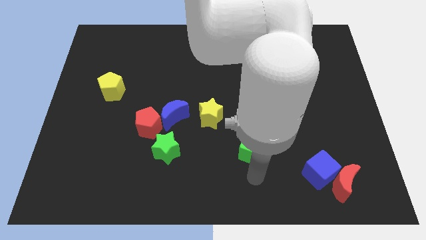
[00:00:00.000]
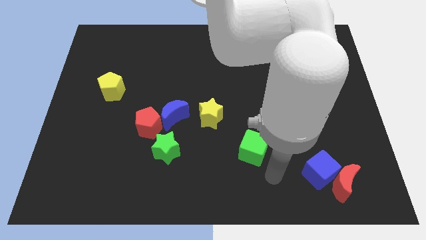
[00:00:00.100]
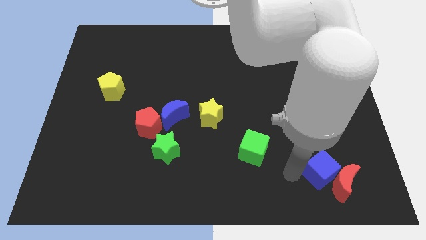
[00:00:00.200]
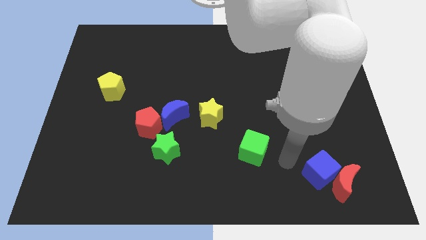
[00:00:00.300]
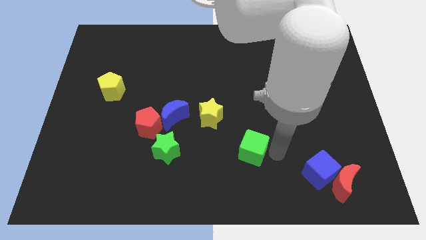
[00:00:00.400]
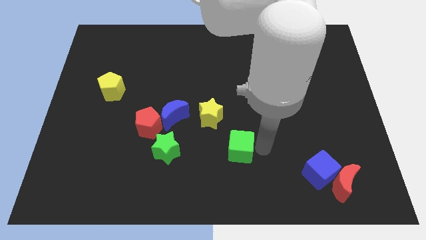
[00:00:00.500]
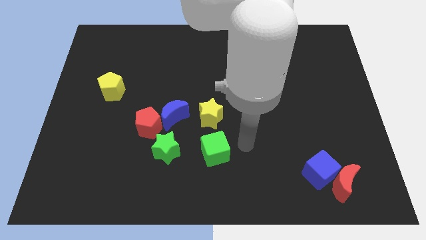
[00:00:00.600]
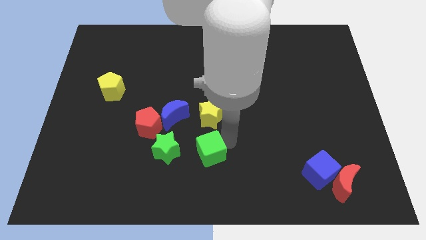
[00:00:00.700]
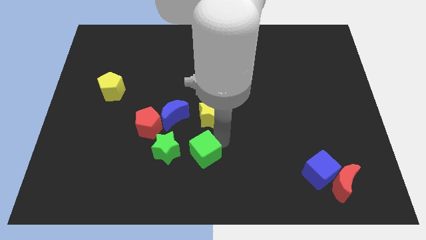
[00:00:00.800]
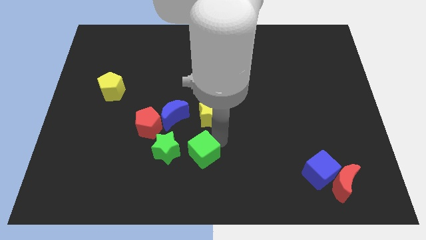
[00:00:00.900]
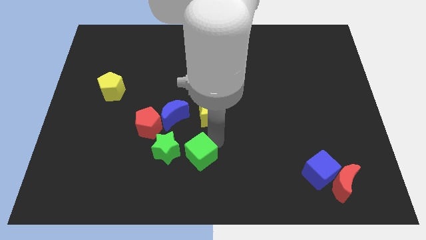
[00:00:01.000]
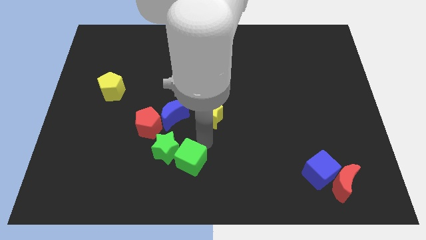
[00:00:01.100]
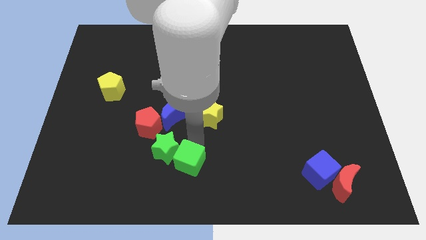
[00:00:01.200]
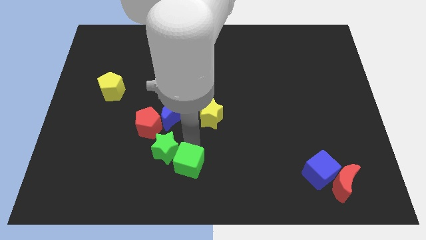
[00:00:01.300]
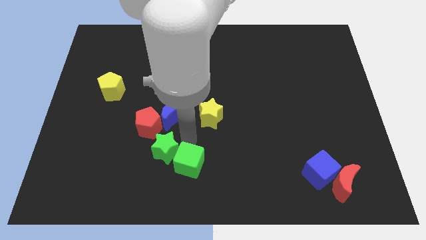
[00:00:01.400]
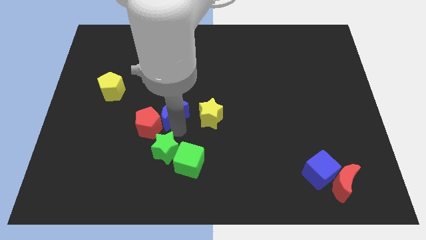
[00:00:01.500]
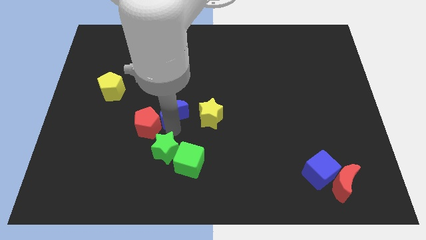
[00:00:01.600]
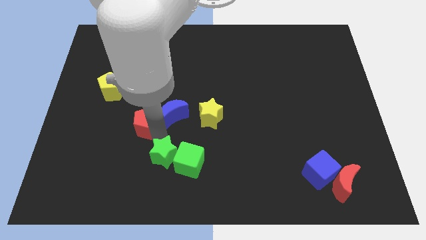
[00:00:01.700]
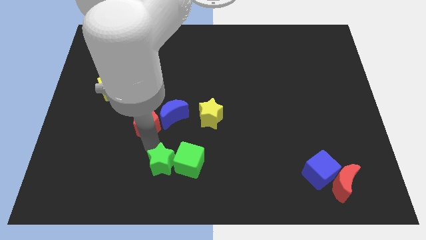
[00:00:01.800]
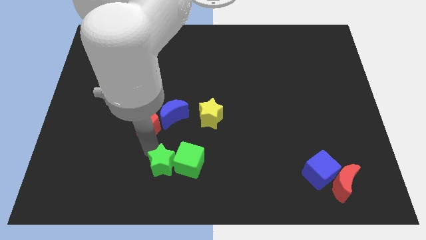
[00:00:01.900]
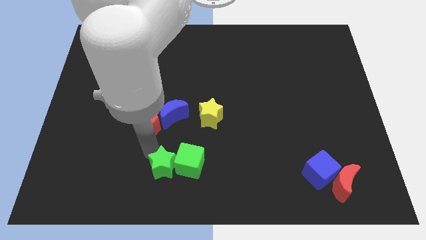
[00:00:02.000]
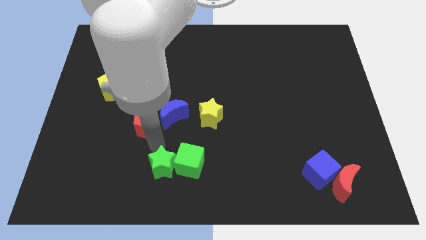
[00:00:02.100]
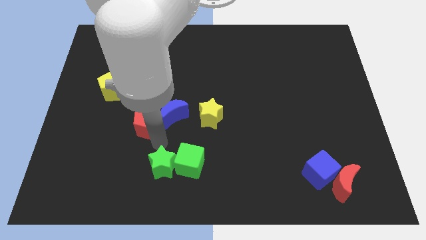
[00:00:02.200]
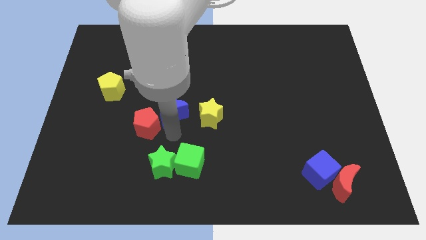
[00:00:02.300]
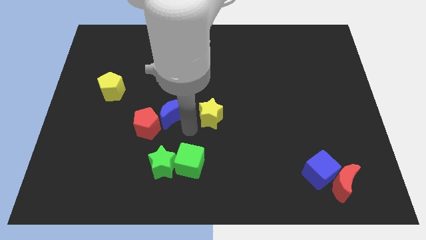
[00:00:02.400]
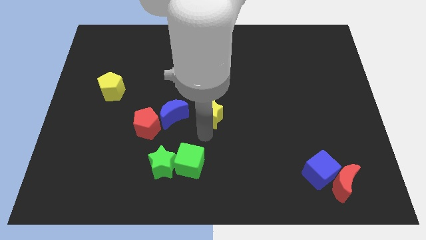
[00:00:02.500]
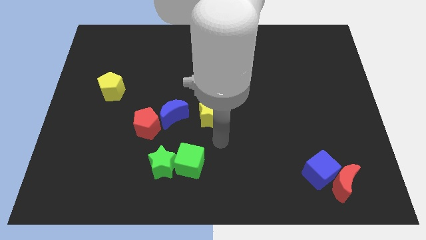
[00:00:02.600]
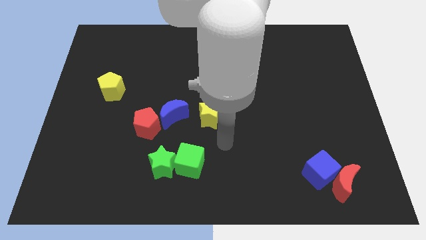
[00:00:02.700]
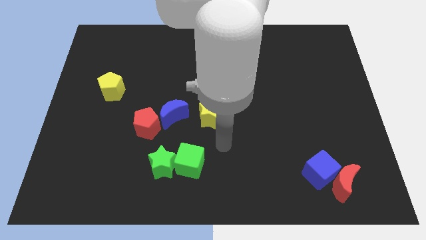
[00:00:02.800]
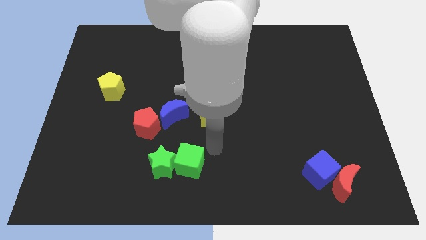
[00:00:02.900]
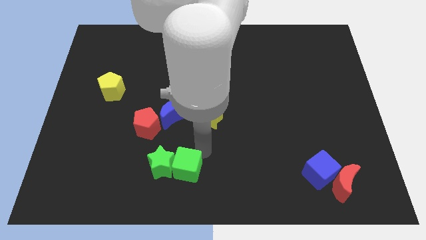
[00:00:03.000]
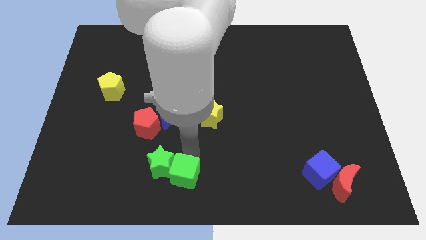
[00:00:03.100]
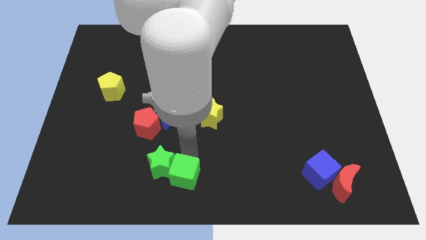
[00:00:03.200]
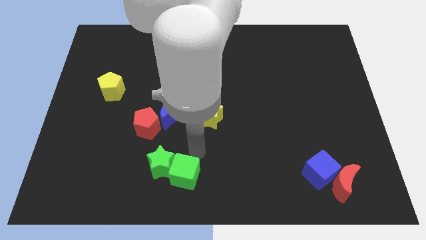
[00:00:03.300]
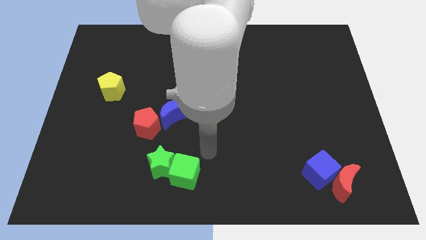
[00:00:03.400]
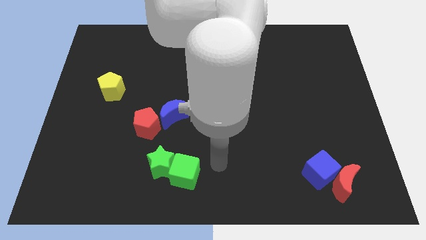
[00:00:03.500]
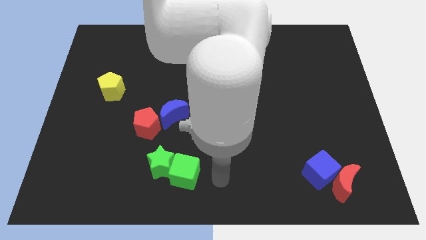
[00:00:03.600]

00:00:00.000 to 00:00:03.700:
push both green blocks to the bottom right side of the red pentagon

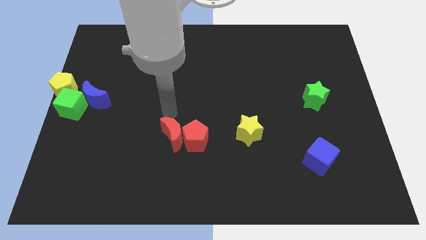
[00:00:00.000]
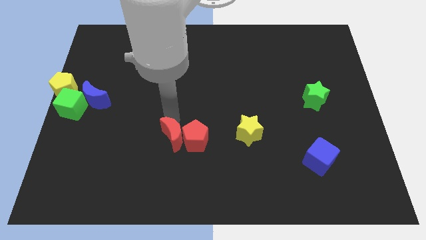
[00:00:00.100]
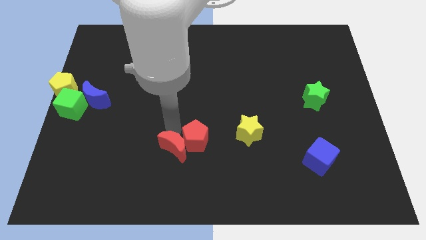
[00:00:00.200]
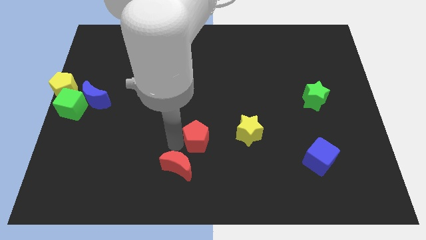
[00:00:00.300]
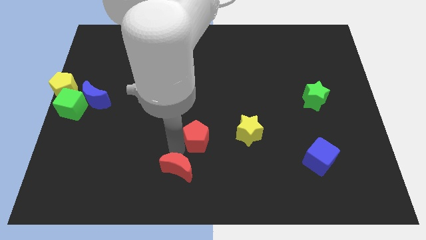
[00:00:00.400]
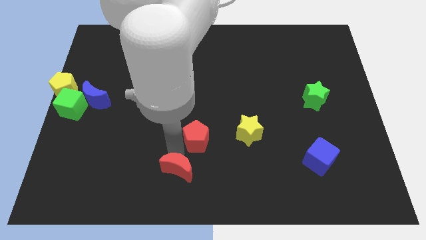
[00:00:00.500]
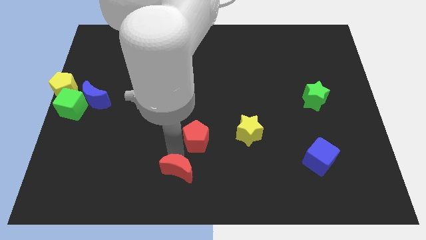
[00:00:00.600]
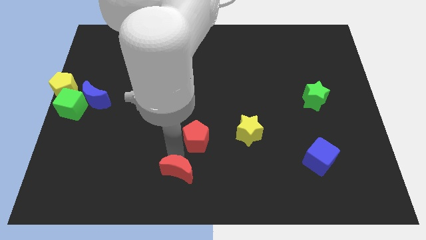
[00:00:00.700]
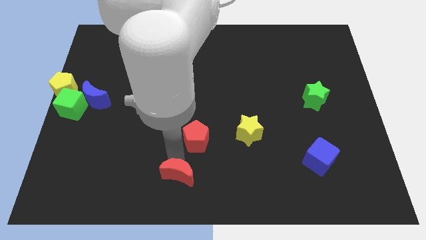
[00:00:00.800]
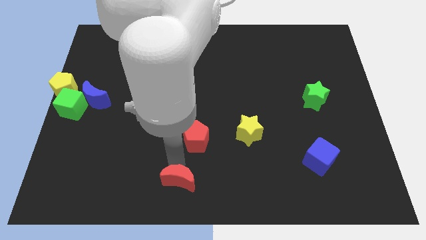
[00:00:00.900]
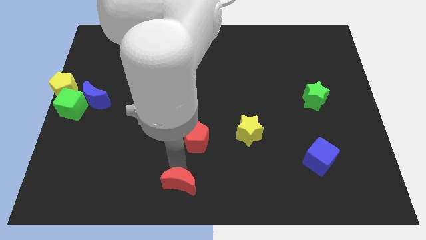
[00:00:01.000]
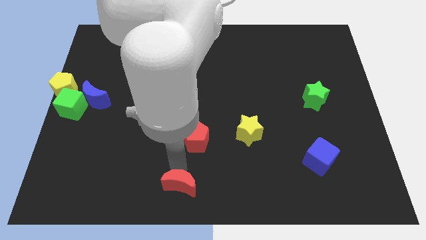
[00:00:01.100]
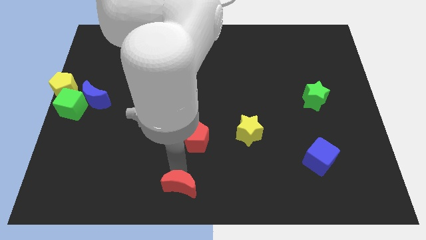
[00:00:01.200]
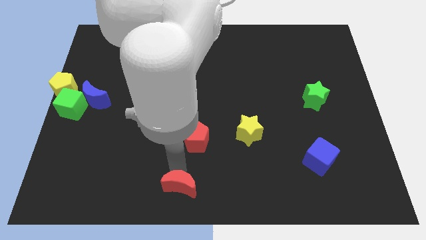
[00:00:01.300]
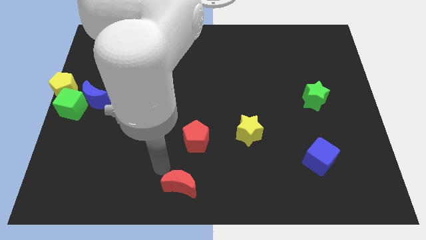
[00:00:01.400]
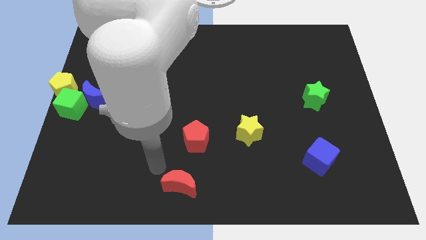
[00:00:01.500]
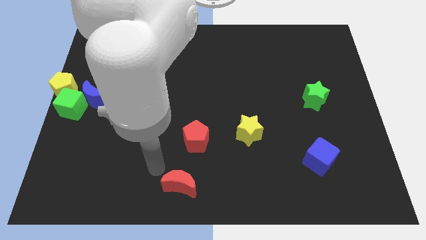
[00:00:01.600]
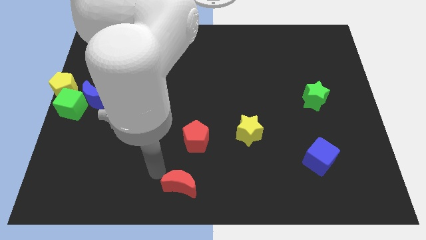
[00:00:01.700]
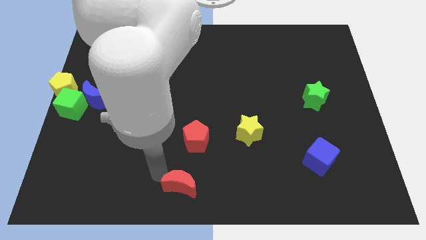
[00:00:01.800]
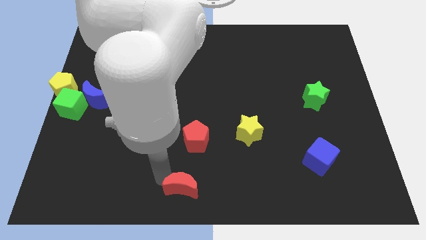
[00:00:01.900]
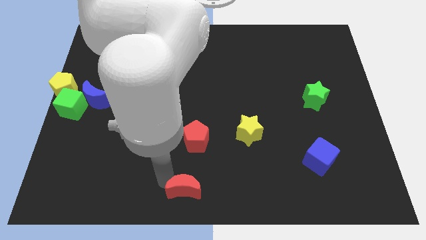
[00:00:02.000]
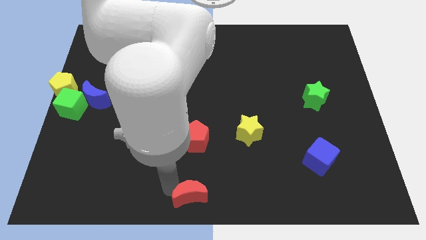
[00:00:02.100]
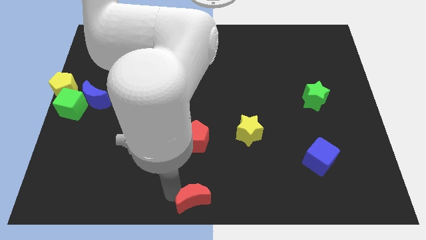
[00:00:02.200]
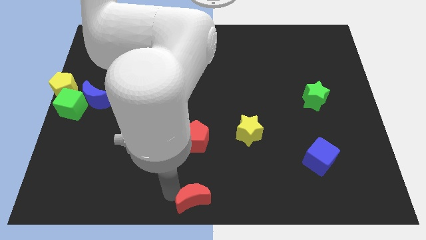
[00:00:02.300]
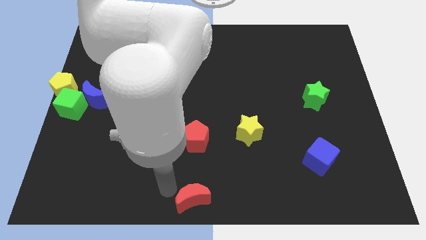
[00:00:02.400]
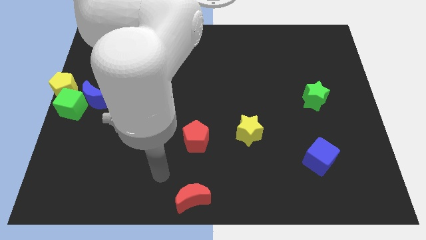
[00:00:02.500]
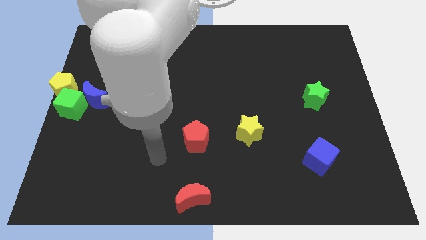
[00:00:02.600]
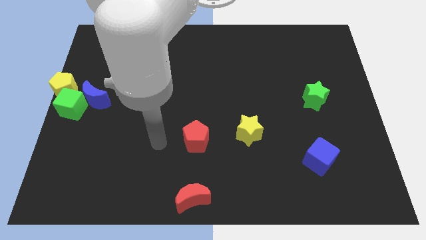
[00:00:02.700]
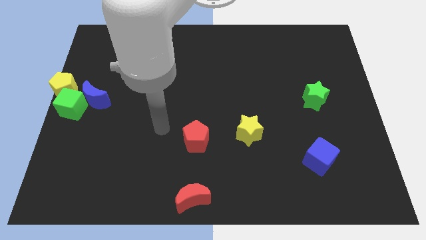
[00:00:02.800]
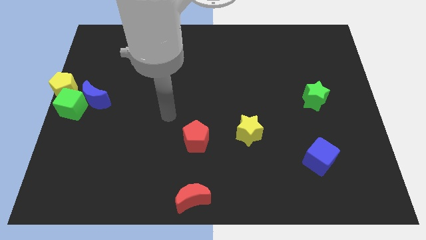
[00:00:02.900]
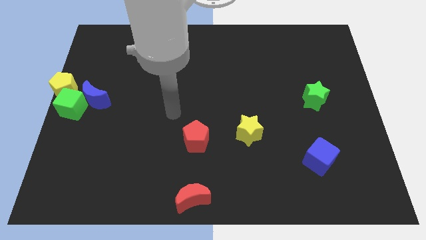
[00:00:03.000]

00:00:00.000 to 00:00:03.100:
place red moon to the bottom center of the board

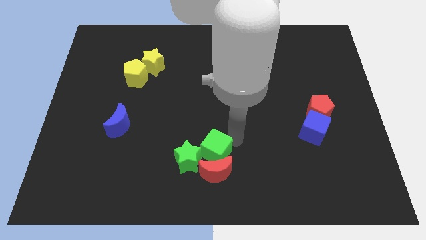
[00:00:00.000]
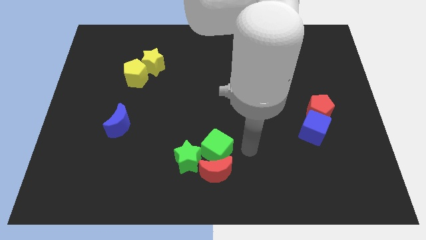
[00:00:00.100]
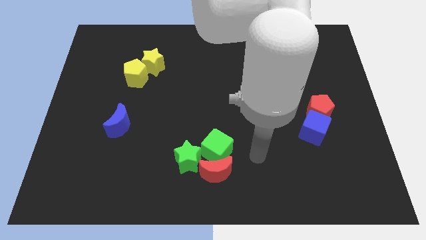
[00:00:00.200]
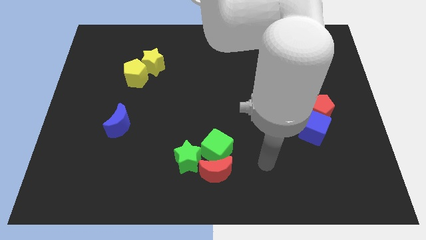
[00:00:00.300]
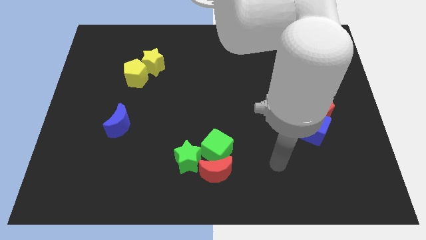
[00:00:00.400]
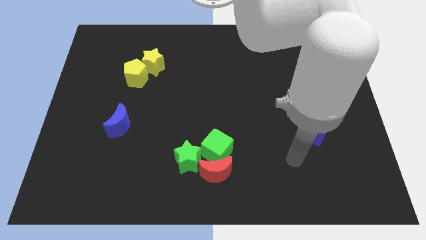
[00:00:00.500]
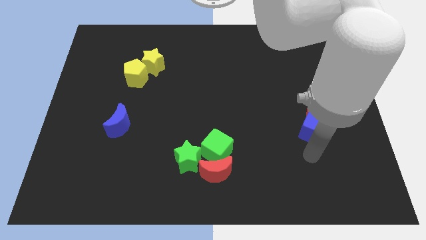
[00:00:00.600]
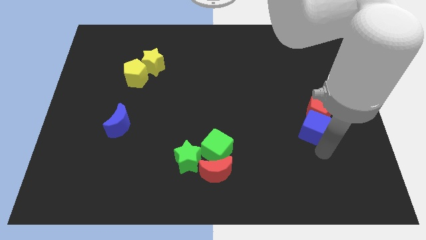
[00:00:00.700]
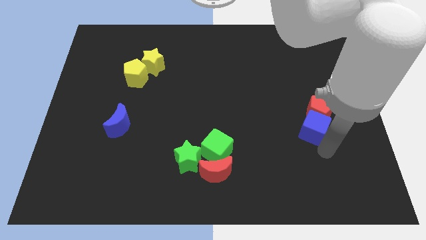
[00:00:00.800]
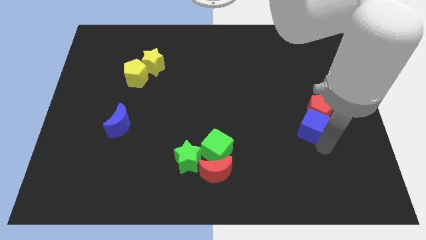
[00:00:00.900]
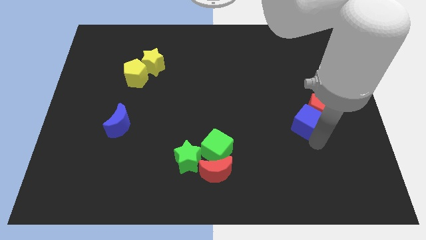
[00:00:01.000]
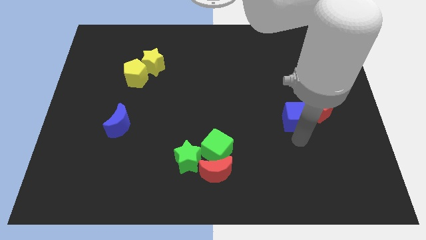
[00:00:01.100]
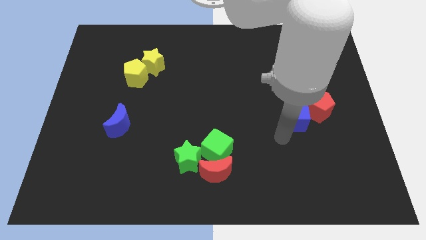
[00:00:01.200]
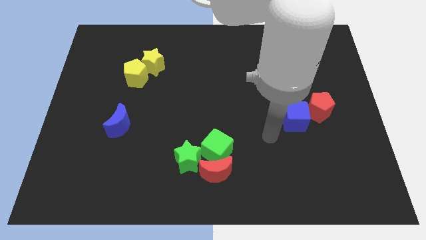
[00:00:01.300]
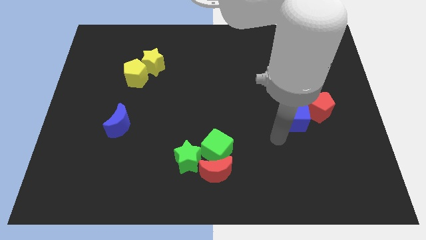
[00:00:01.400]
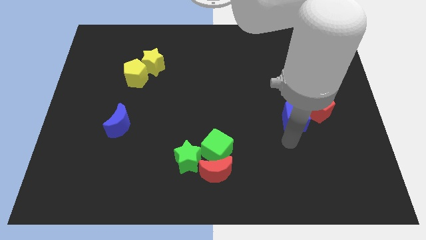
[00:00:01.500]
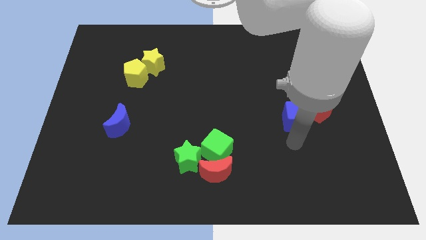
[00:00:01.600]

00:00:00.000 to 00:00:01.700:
slightly push the blue cube and red pentagon towards the top side of the board

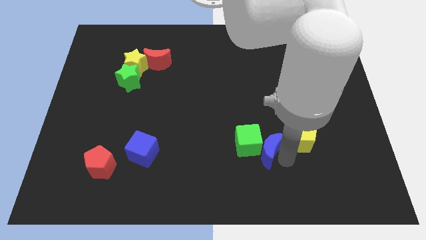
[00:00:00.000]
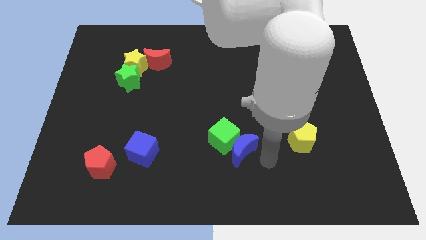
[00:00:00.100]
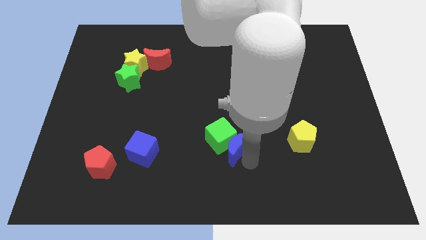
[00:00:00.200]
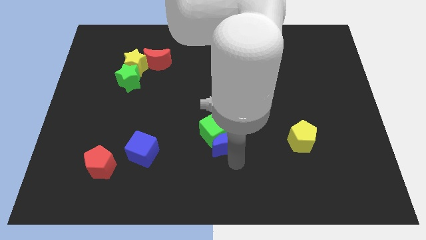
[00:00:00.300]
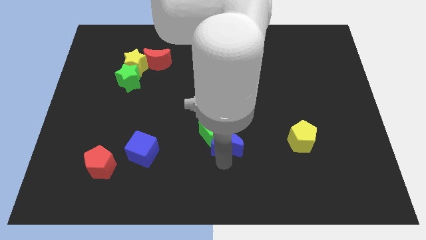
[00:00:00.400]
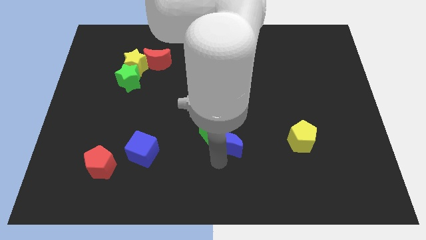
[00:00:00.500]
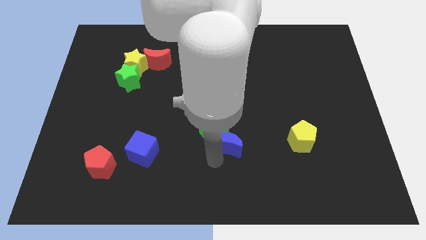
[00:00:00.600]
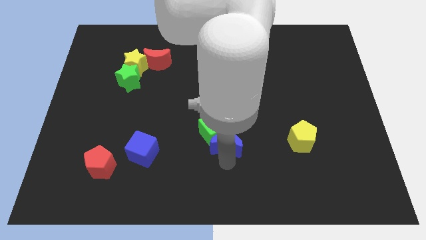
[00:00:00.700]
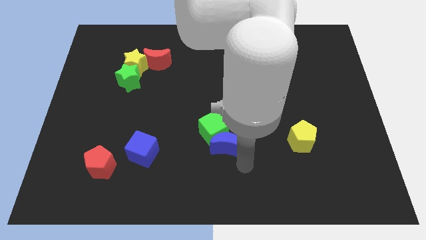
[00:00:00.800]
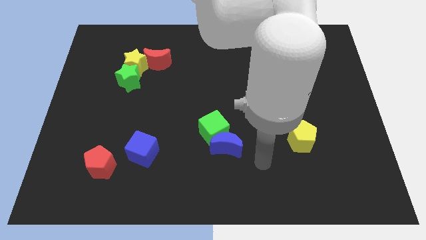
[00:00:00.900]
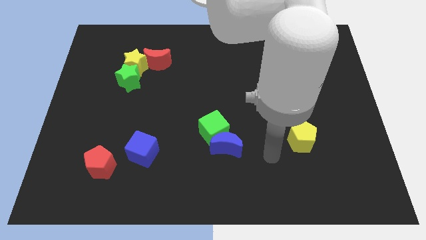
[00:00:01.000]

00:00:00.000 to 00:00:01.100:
move the blue moon and green cube slightly to left
